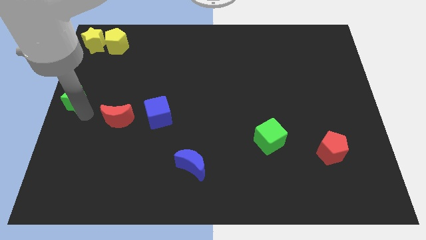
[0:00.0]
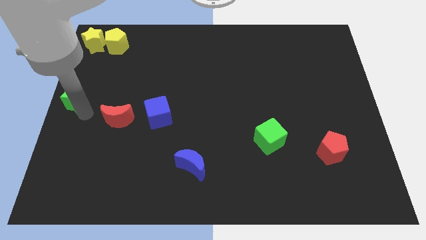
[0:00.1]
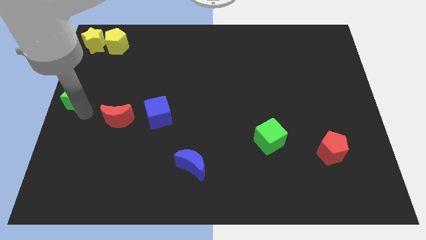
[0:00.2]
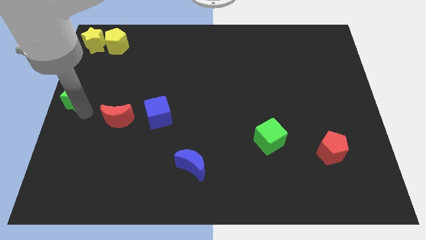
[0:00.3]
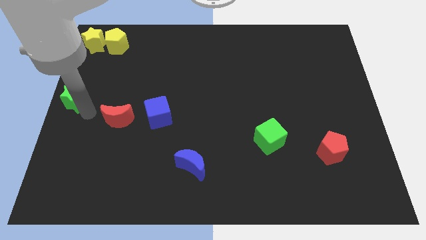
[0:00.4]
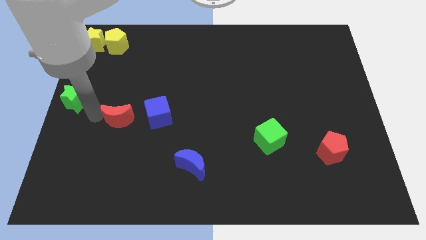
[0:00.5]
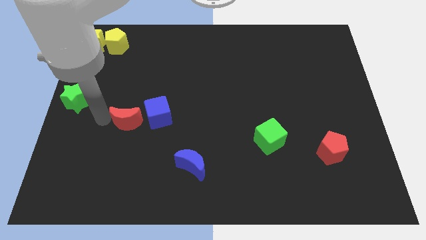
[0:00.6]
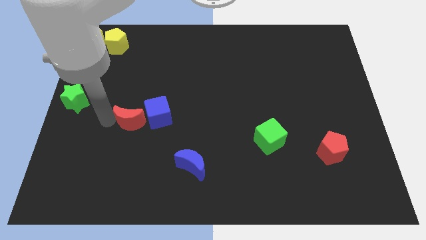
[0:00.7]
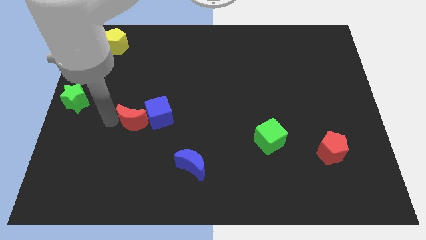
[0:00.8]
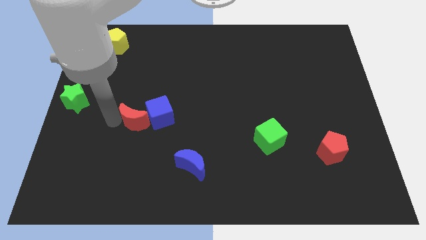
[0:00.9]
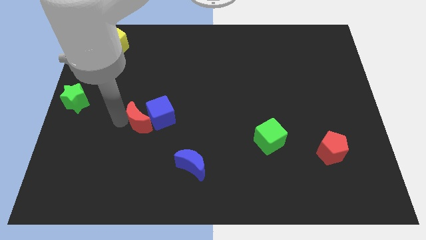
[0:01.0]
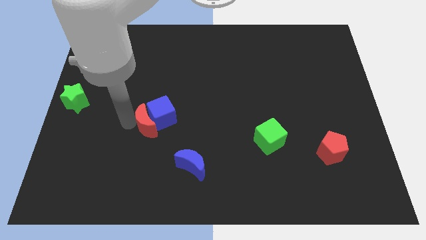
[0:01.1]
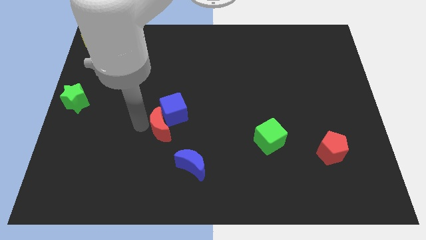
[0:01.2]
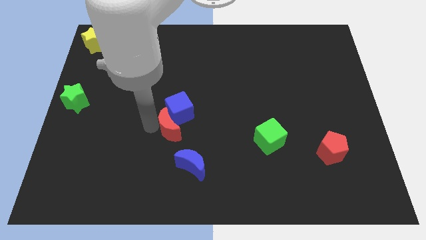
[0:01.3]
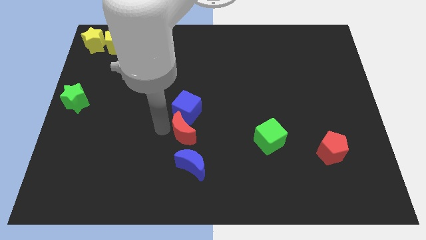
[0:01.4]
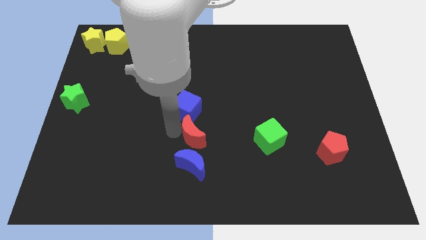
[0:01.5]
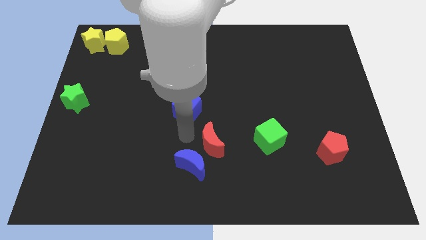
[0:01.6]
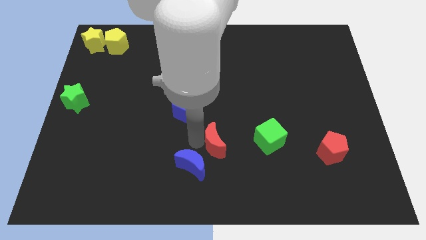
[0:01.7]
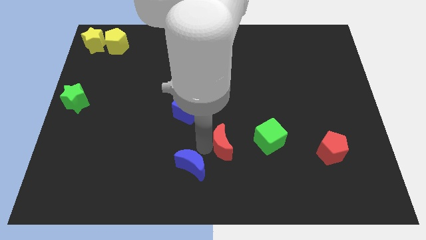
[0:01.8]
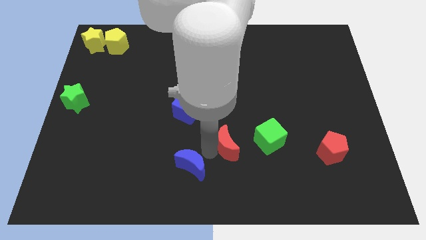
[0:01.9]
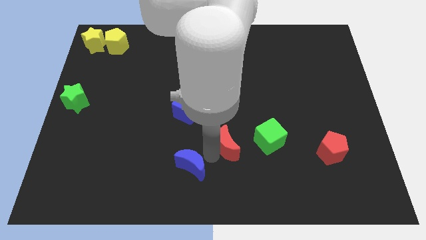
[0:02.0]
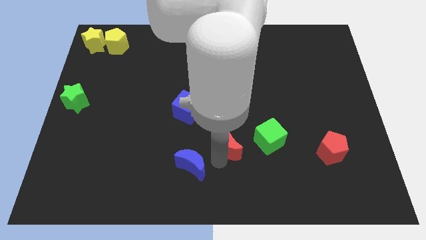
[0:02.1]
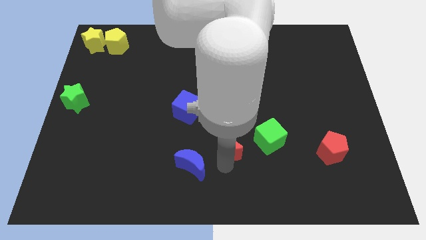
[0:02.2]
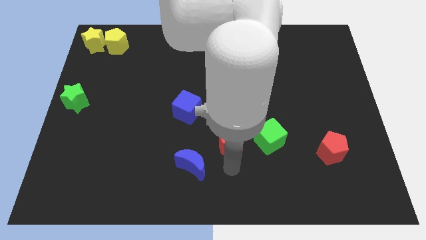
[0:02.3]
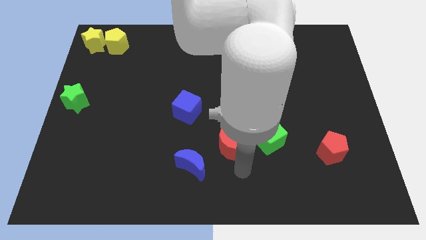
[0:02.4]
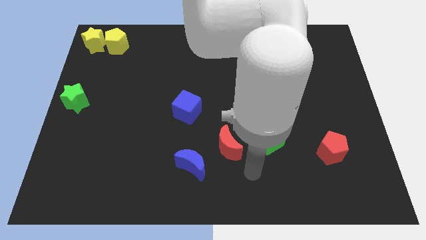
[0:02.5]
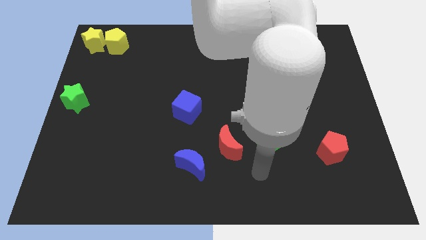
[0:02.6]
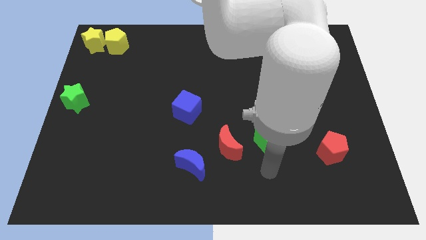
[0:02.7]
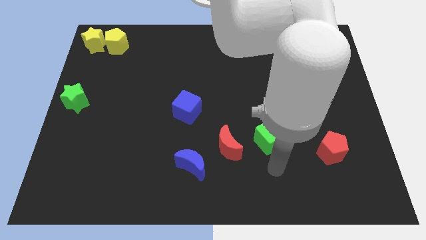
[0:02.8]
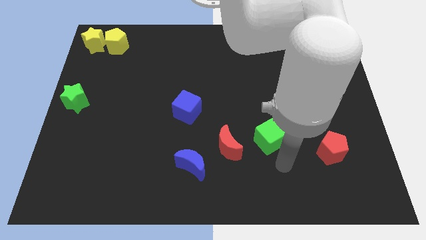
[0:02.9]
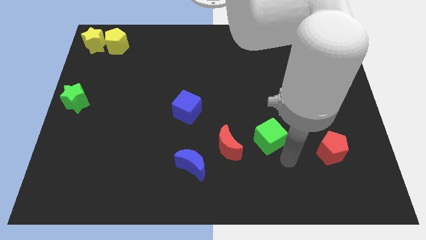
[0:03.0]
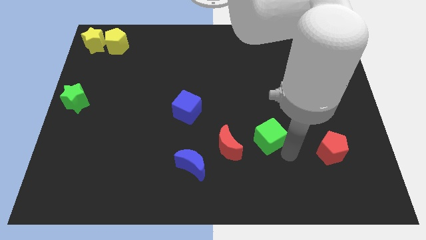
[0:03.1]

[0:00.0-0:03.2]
separate red crescent from the blue cube

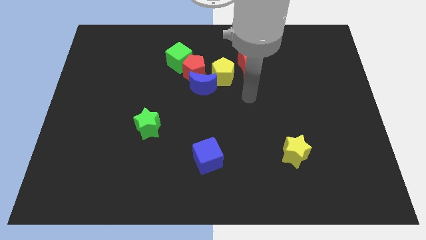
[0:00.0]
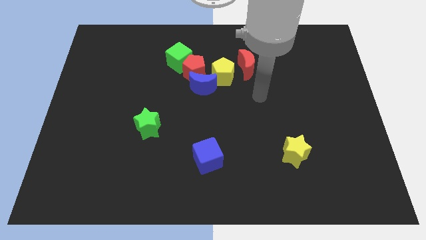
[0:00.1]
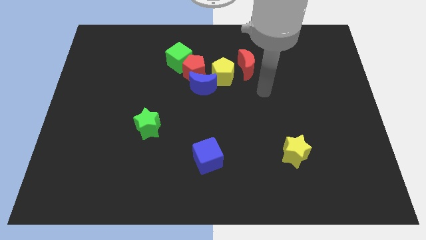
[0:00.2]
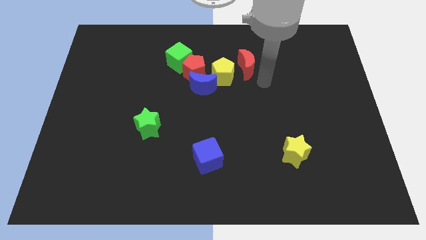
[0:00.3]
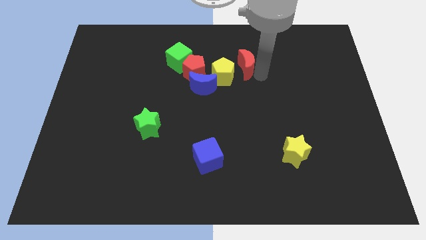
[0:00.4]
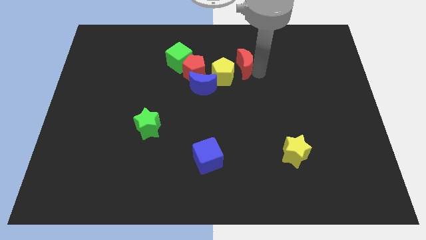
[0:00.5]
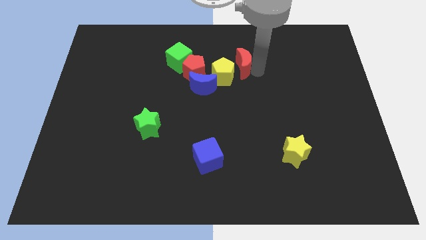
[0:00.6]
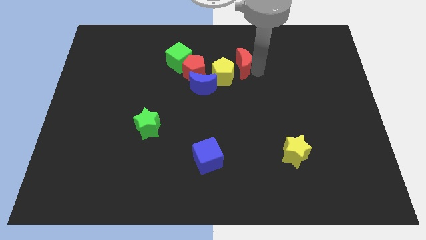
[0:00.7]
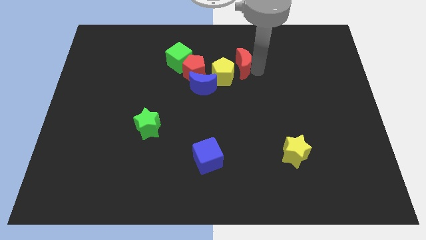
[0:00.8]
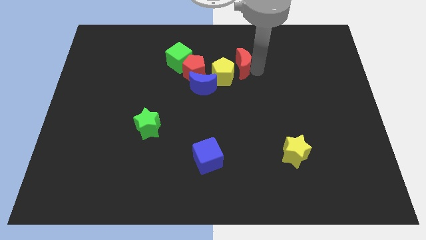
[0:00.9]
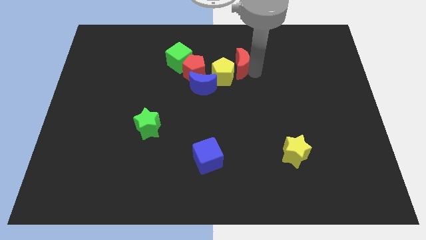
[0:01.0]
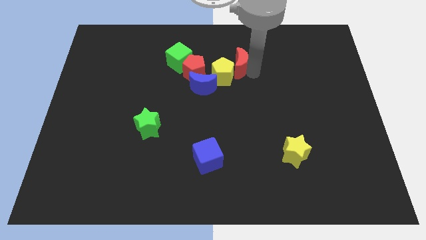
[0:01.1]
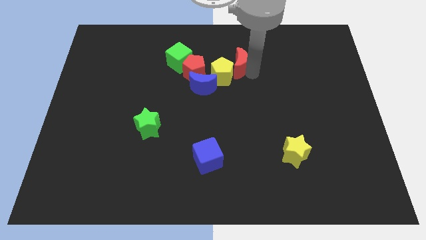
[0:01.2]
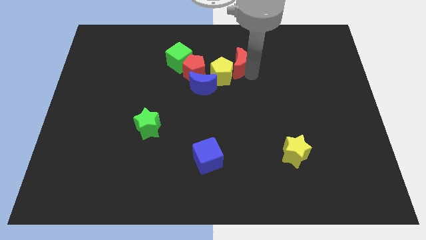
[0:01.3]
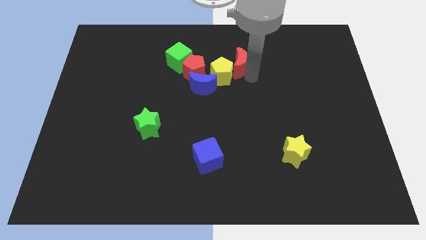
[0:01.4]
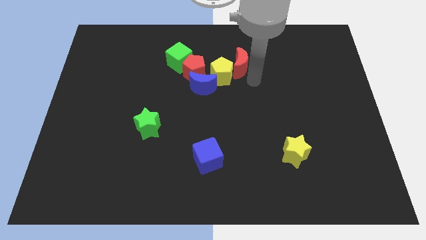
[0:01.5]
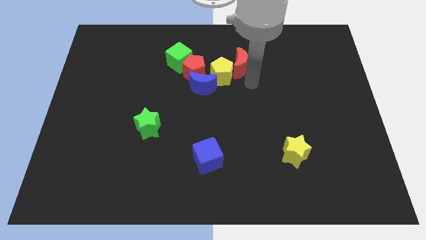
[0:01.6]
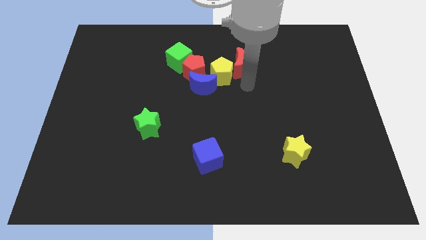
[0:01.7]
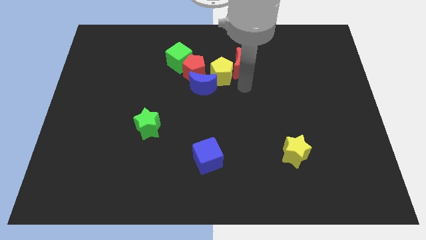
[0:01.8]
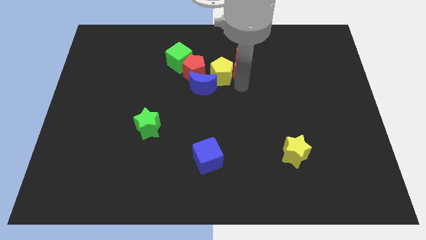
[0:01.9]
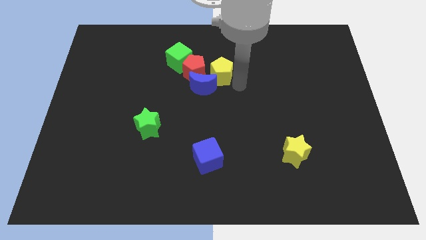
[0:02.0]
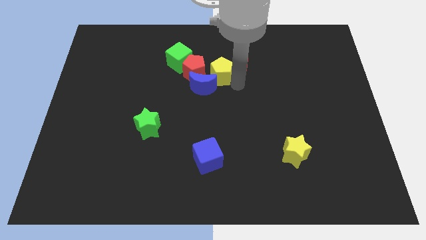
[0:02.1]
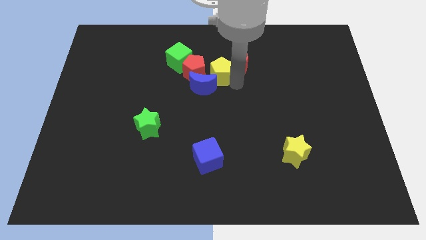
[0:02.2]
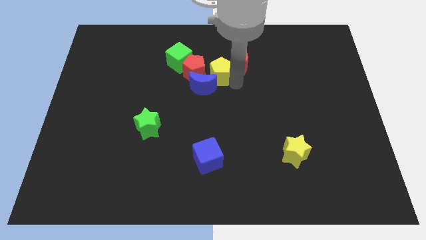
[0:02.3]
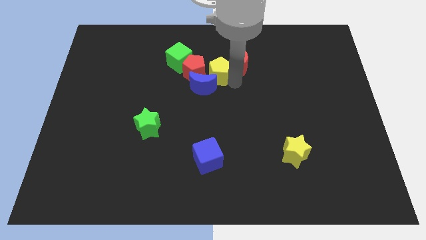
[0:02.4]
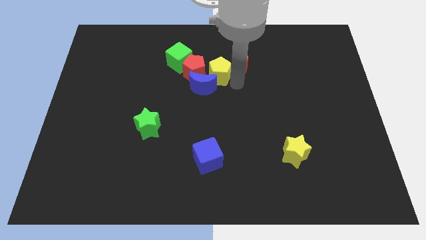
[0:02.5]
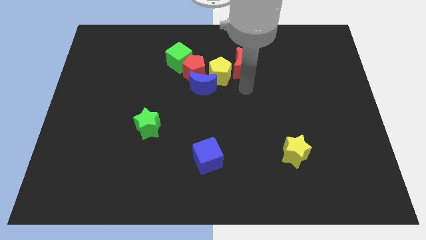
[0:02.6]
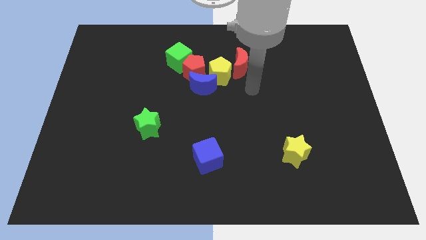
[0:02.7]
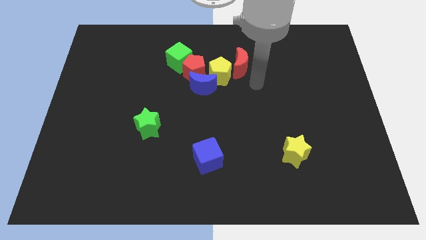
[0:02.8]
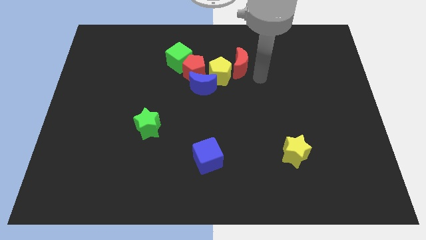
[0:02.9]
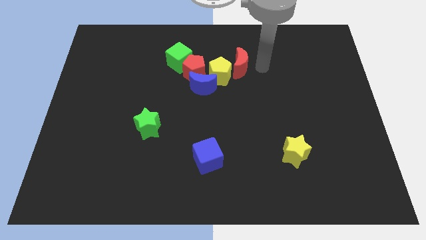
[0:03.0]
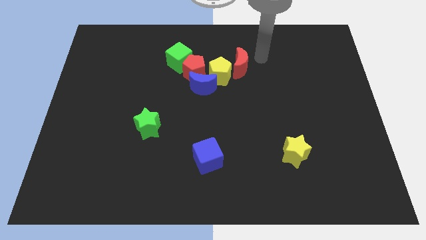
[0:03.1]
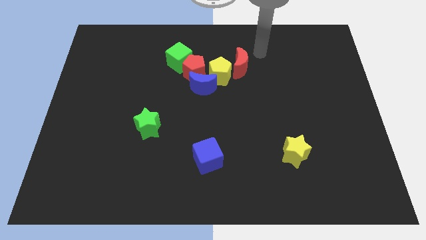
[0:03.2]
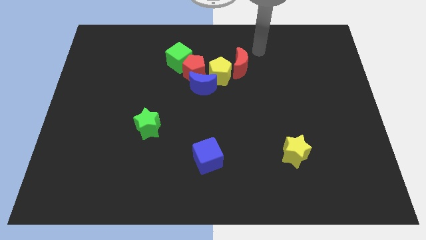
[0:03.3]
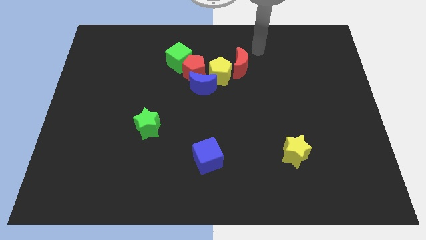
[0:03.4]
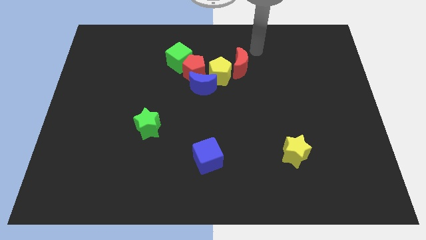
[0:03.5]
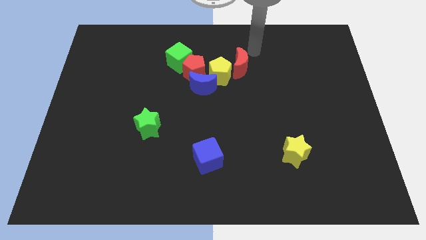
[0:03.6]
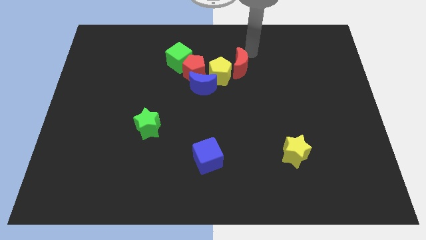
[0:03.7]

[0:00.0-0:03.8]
slightly touch the bottom of the yellow pentagon and red moon

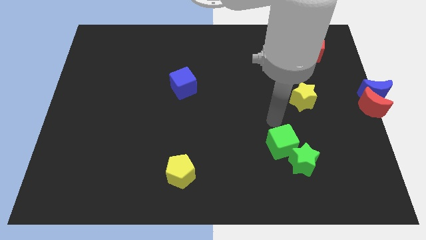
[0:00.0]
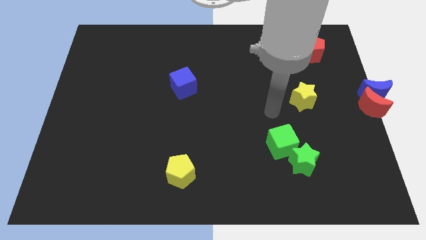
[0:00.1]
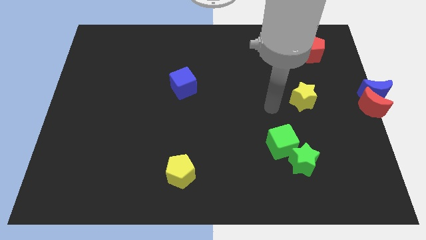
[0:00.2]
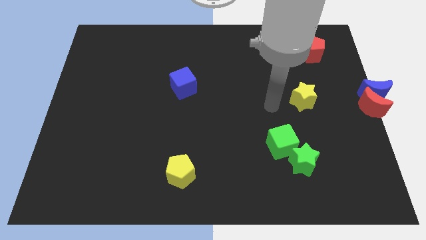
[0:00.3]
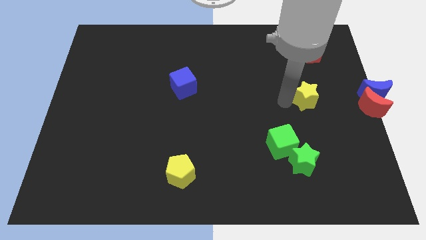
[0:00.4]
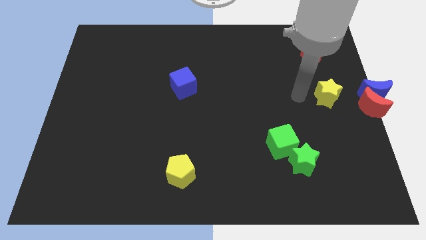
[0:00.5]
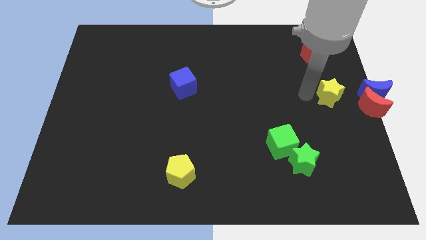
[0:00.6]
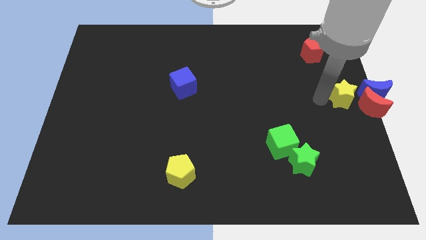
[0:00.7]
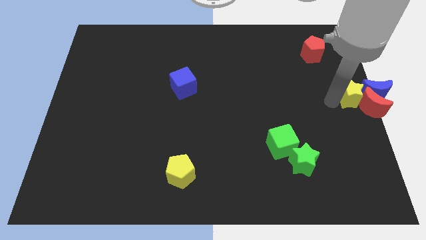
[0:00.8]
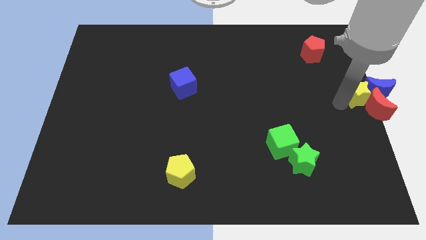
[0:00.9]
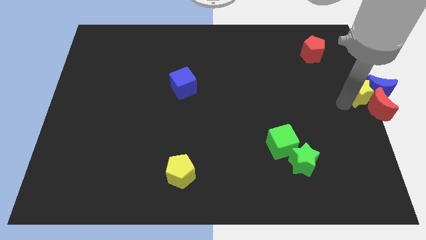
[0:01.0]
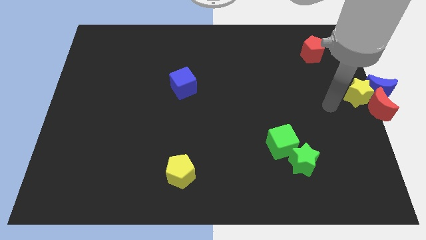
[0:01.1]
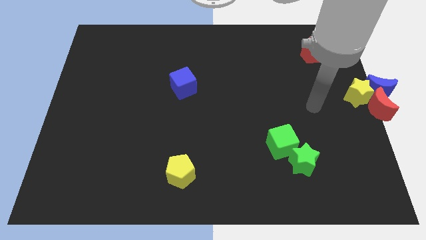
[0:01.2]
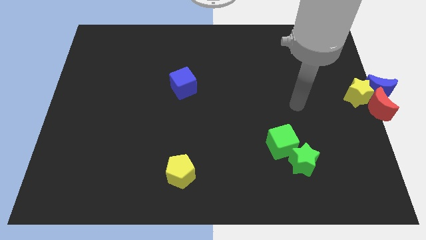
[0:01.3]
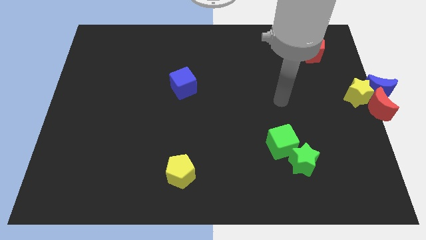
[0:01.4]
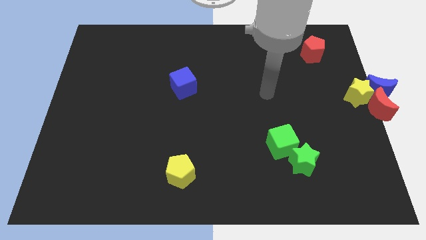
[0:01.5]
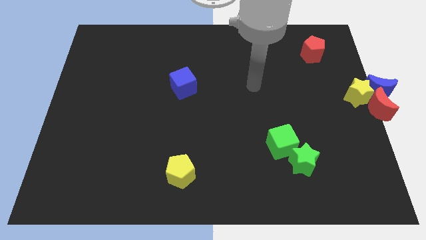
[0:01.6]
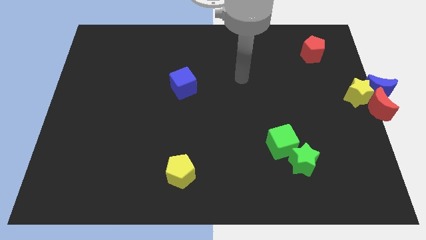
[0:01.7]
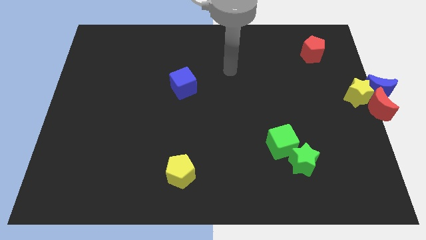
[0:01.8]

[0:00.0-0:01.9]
push the yellow star into the blue and red moons
